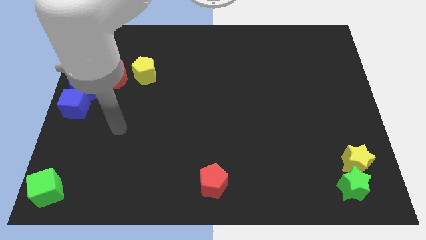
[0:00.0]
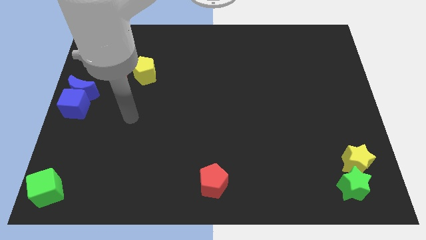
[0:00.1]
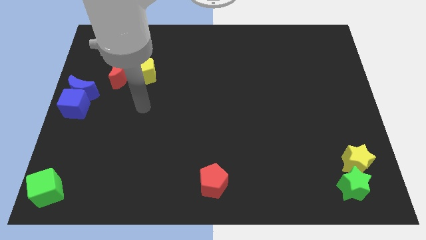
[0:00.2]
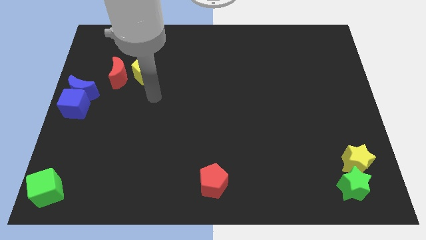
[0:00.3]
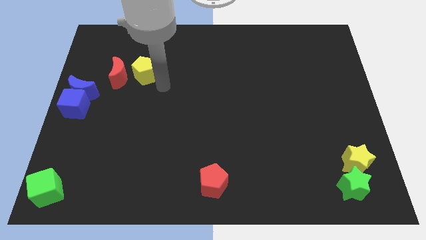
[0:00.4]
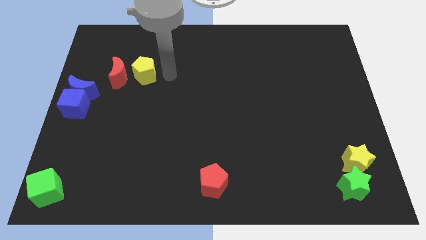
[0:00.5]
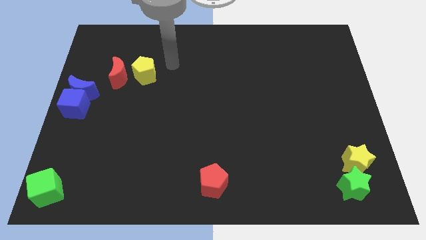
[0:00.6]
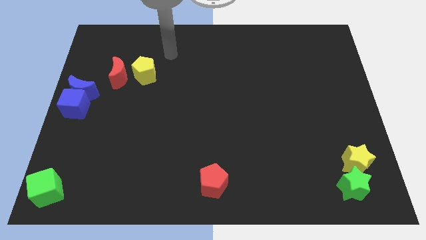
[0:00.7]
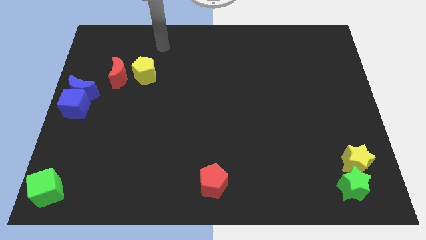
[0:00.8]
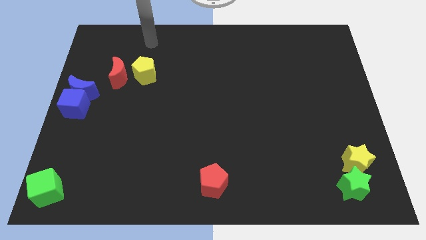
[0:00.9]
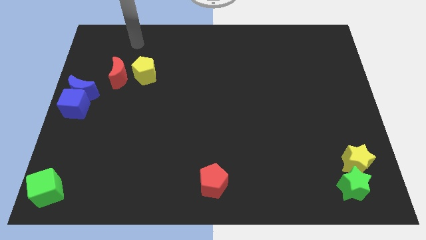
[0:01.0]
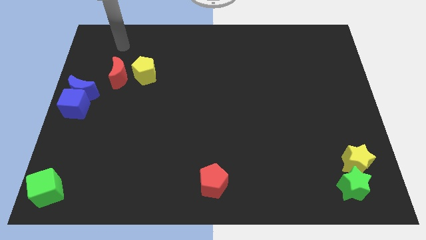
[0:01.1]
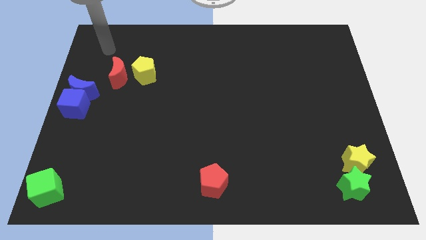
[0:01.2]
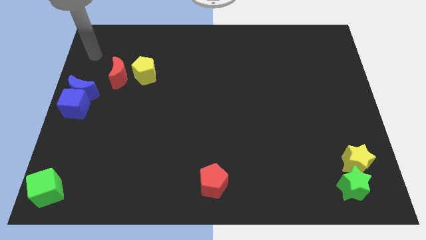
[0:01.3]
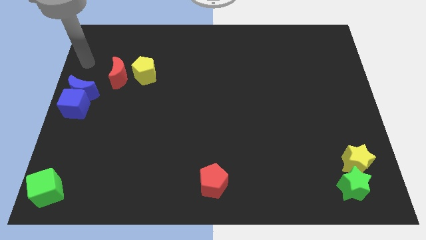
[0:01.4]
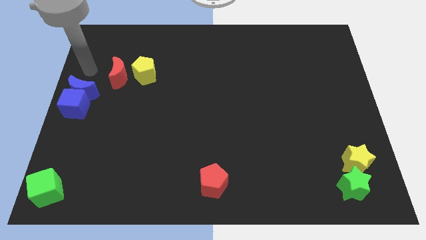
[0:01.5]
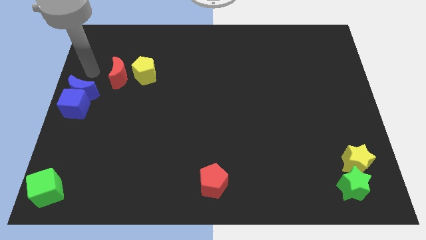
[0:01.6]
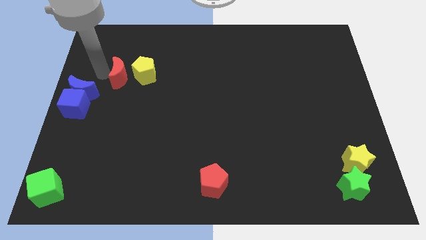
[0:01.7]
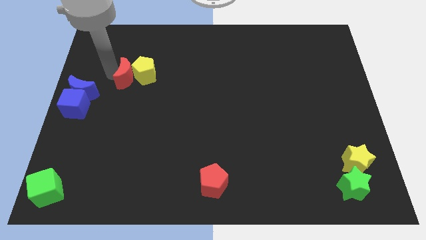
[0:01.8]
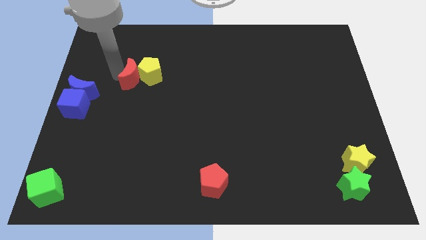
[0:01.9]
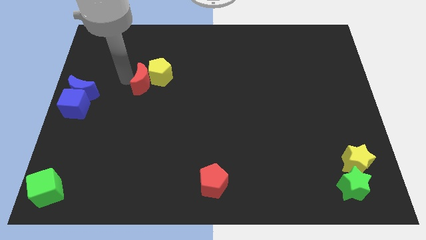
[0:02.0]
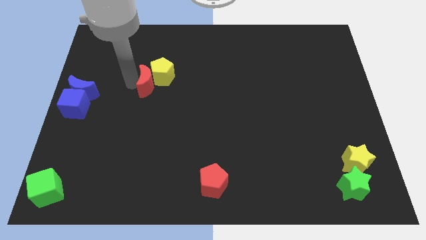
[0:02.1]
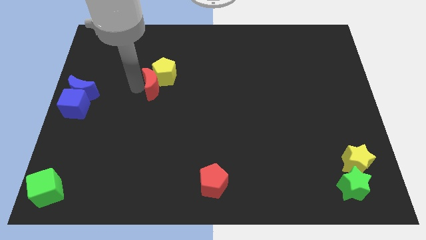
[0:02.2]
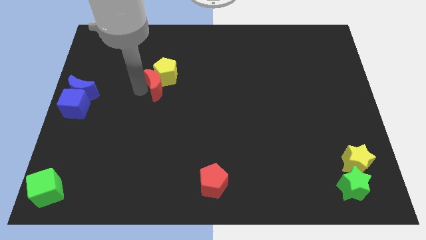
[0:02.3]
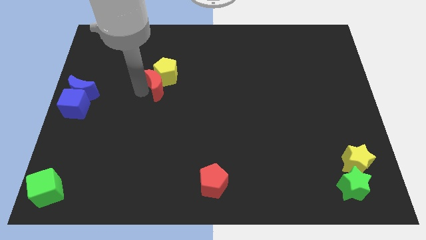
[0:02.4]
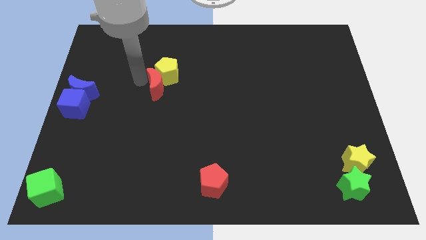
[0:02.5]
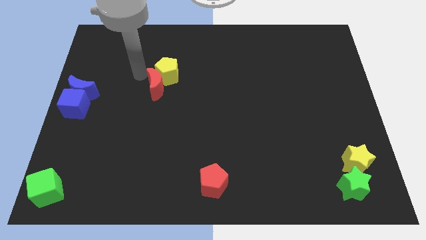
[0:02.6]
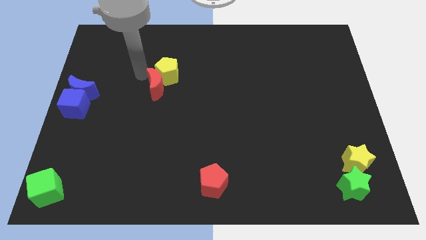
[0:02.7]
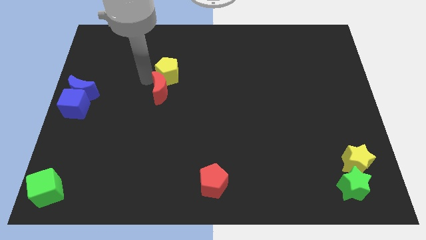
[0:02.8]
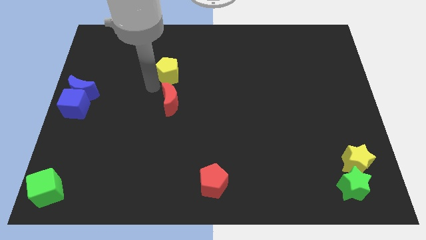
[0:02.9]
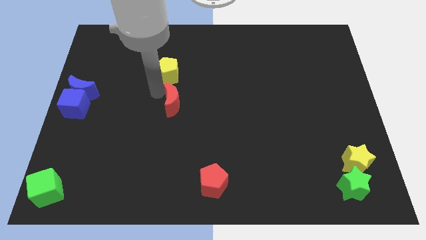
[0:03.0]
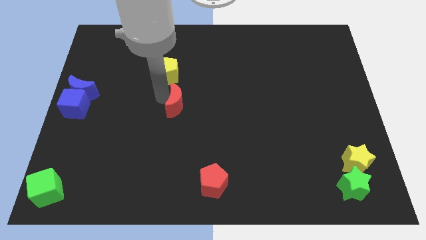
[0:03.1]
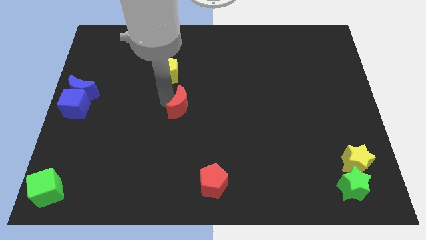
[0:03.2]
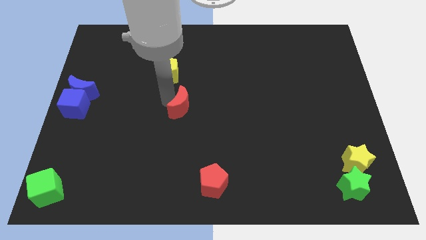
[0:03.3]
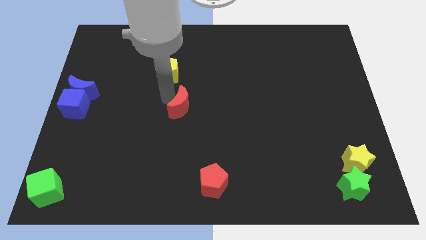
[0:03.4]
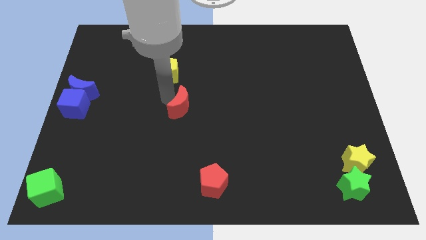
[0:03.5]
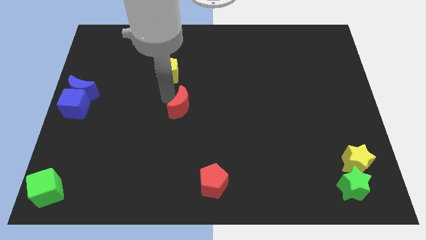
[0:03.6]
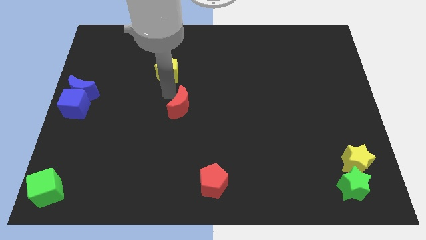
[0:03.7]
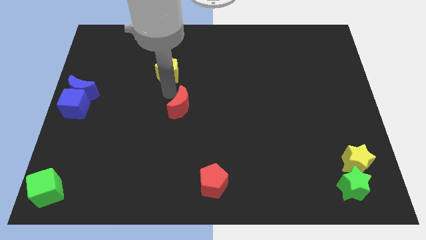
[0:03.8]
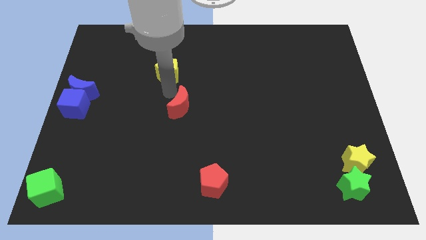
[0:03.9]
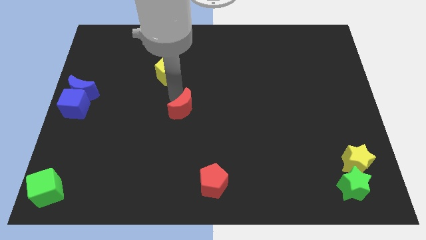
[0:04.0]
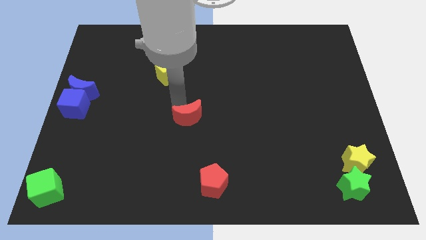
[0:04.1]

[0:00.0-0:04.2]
move the red crescent towards the center

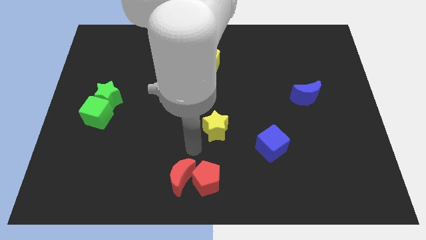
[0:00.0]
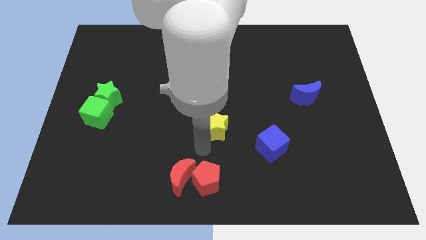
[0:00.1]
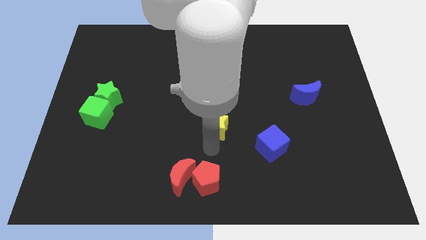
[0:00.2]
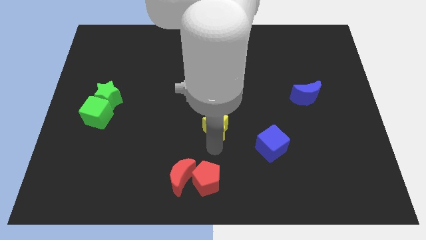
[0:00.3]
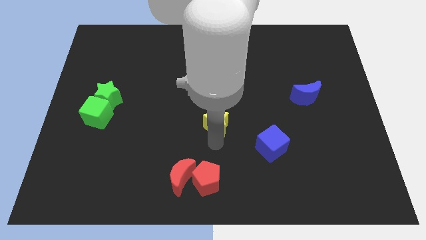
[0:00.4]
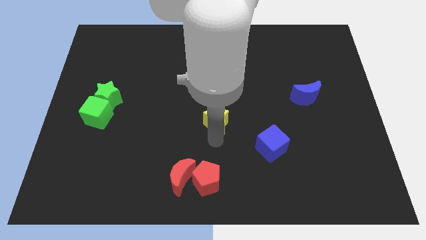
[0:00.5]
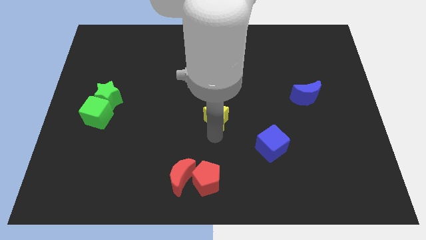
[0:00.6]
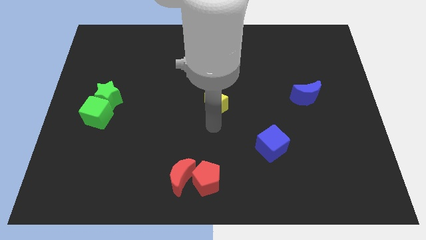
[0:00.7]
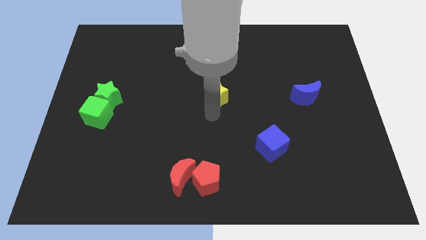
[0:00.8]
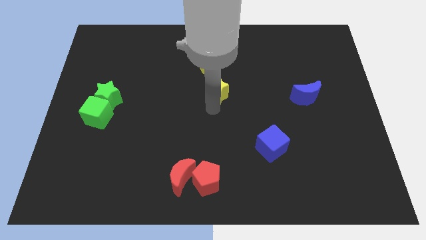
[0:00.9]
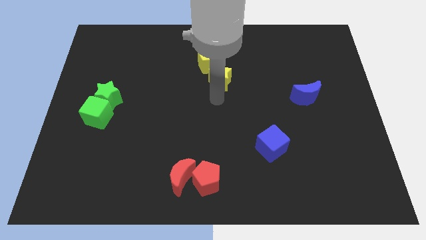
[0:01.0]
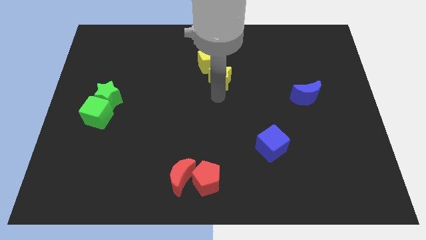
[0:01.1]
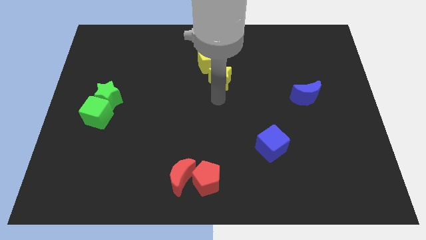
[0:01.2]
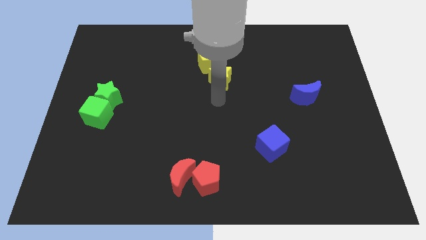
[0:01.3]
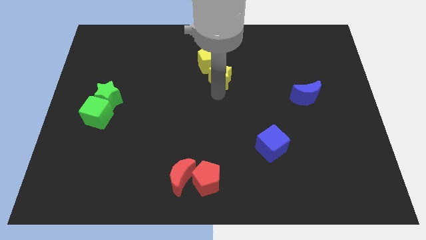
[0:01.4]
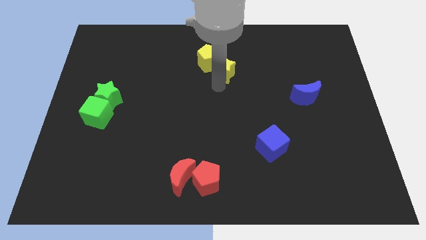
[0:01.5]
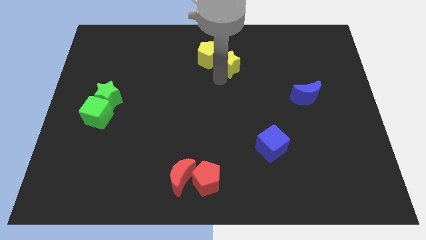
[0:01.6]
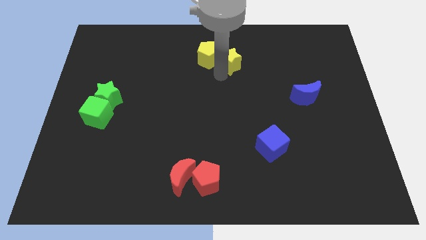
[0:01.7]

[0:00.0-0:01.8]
push the yellow star into yellow pentagon

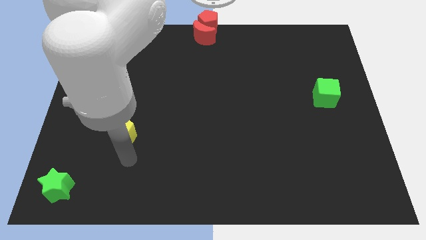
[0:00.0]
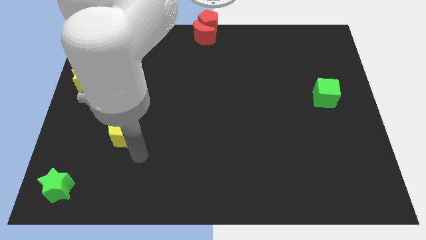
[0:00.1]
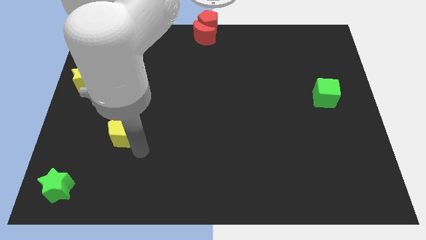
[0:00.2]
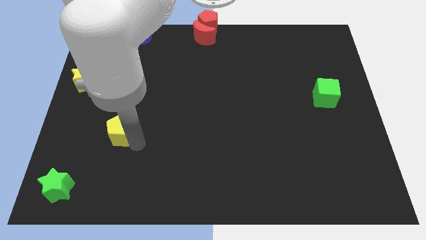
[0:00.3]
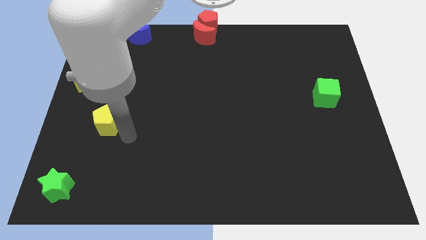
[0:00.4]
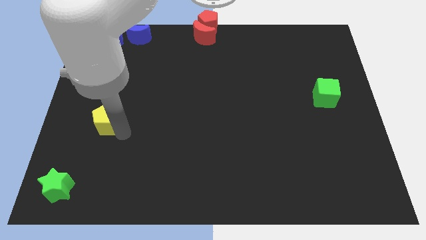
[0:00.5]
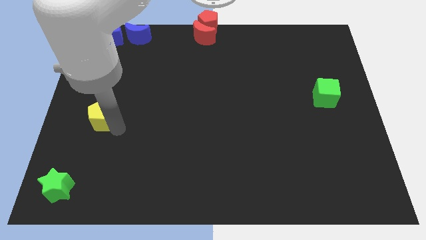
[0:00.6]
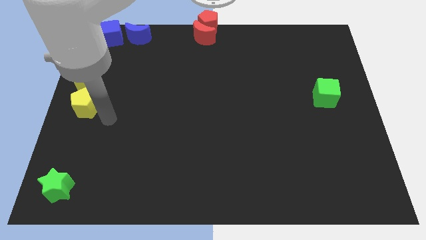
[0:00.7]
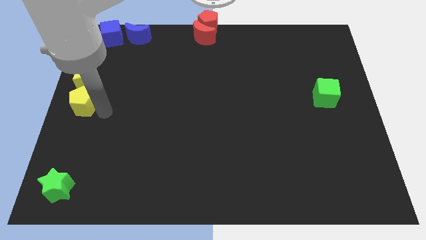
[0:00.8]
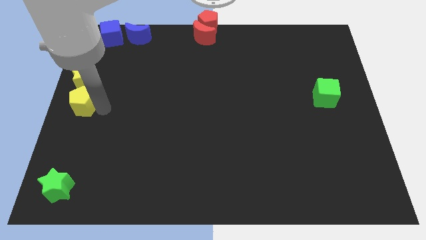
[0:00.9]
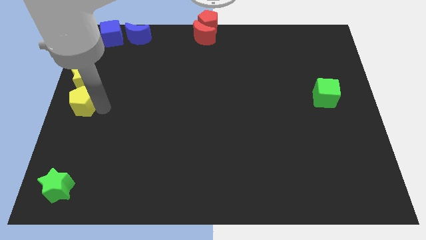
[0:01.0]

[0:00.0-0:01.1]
place yellow pentagon below the yellow star

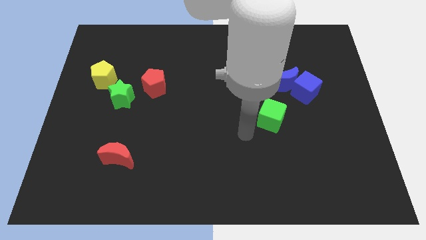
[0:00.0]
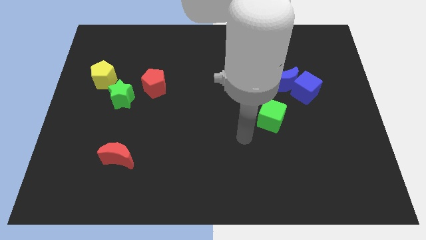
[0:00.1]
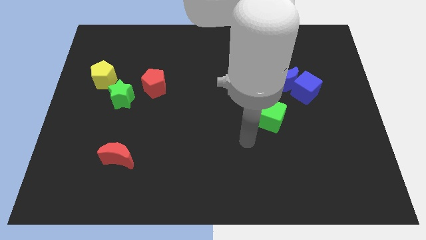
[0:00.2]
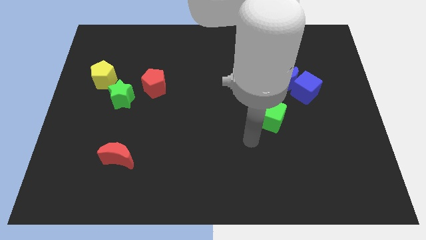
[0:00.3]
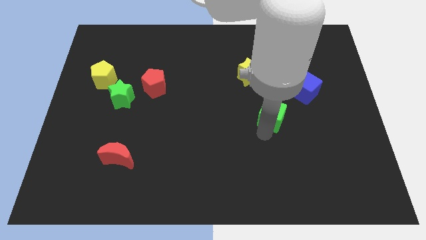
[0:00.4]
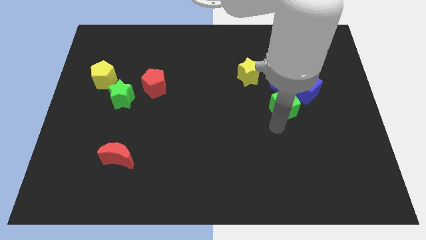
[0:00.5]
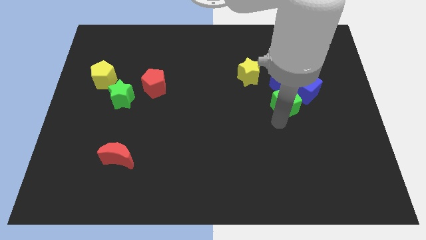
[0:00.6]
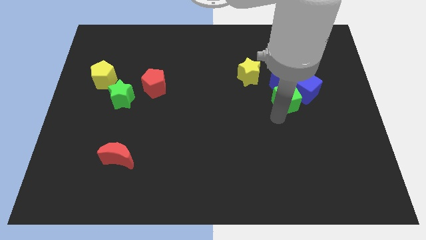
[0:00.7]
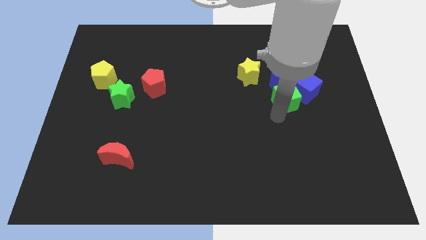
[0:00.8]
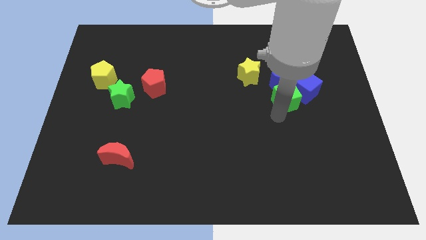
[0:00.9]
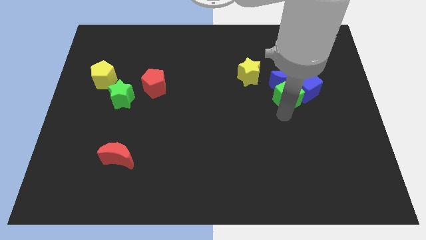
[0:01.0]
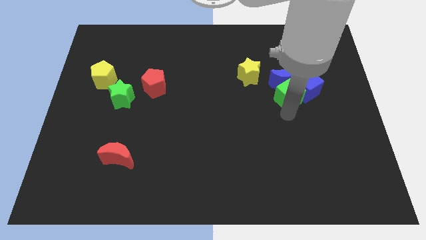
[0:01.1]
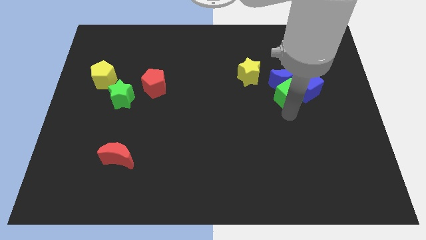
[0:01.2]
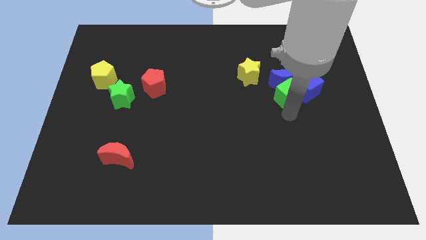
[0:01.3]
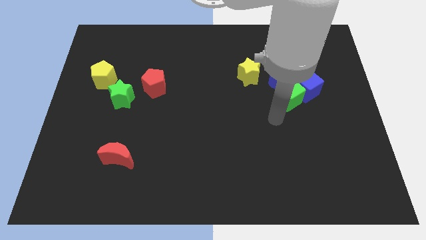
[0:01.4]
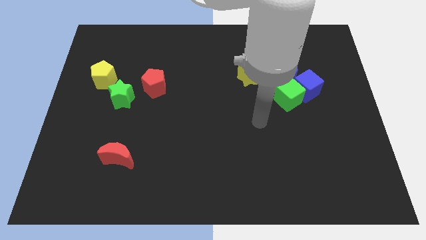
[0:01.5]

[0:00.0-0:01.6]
put the green cube into the blue blocks

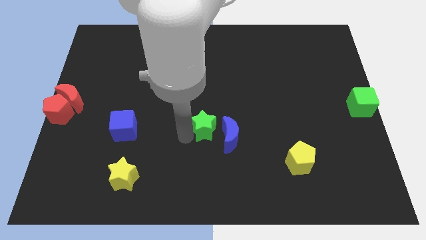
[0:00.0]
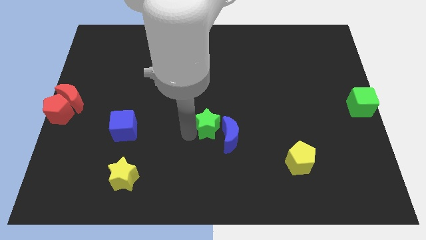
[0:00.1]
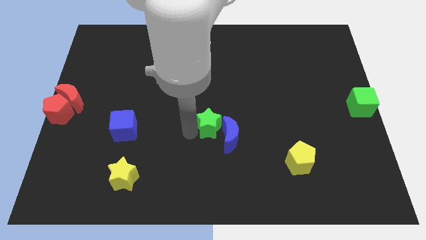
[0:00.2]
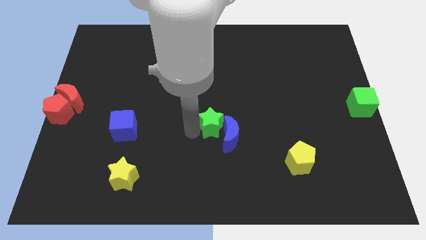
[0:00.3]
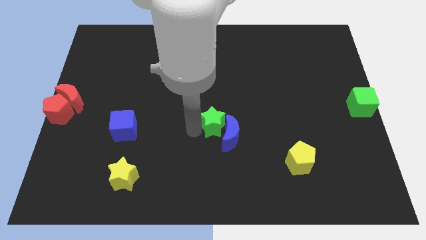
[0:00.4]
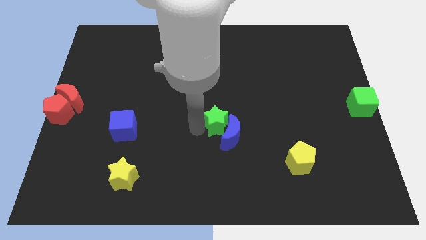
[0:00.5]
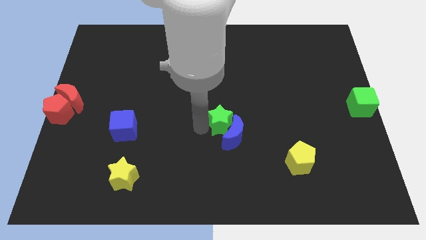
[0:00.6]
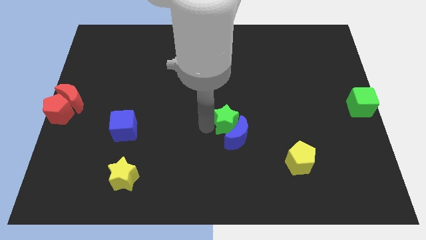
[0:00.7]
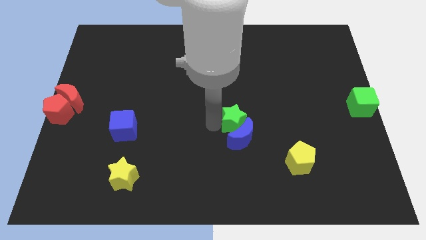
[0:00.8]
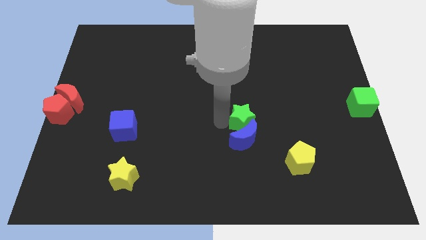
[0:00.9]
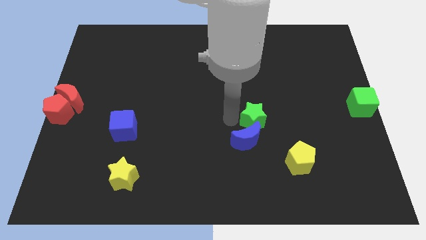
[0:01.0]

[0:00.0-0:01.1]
place the green star above the blue crescent
